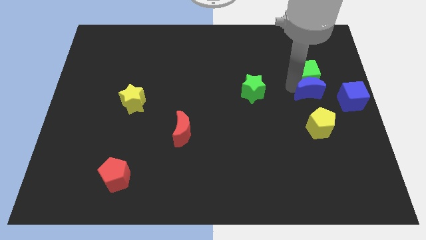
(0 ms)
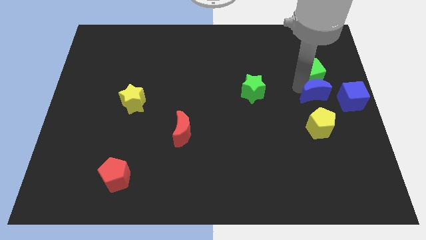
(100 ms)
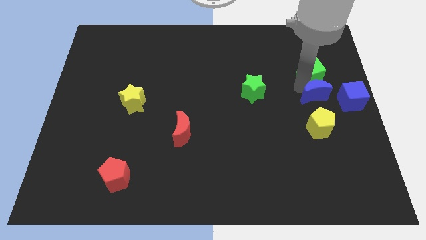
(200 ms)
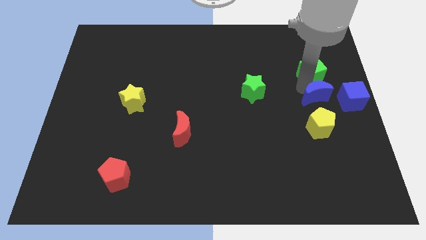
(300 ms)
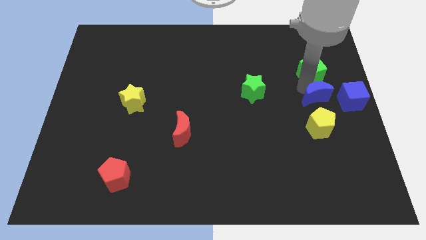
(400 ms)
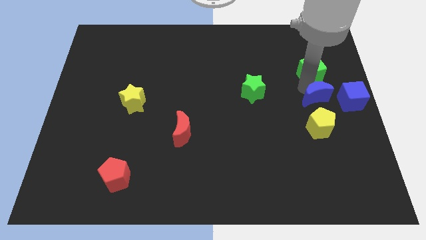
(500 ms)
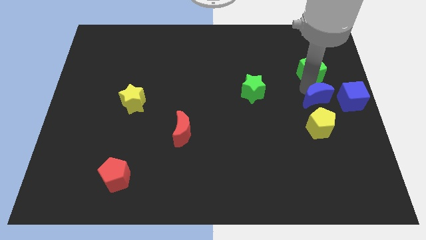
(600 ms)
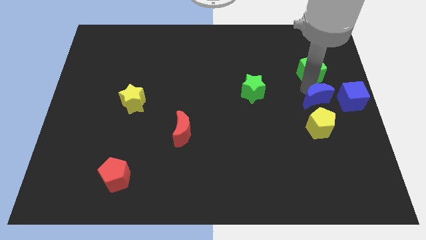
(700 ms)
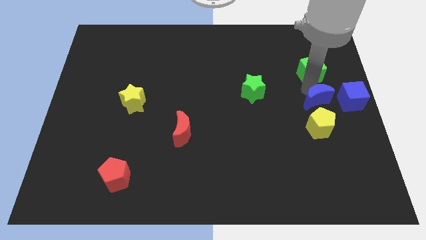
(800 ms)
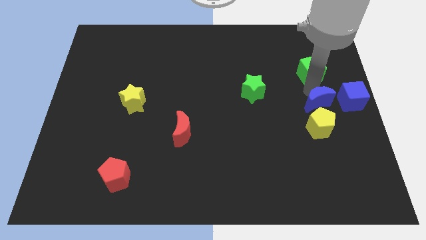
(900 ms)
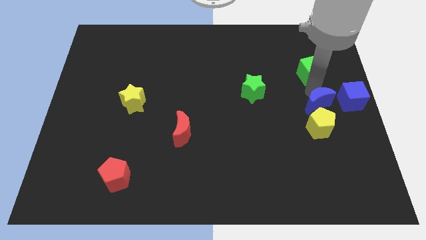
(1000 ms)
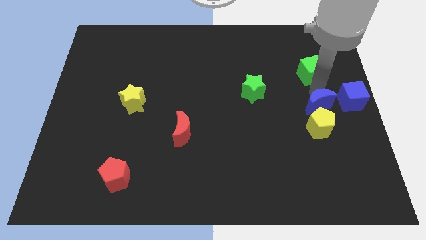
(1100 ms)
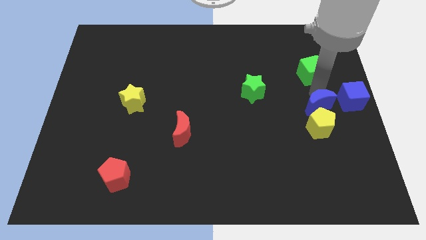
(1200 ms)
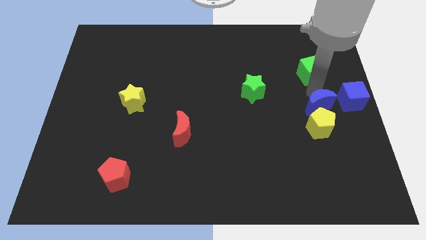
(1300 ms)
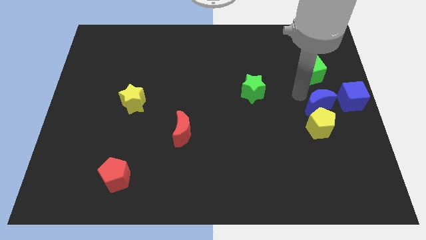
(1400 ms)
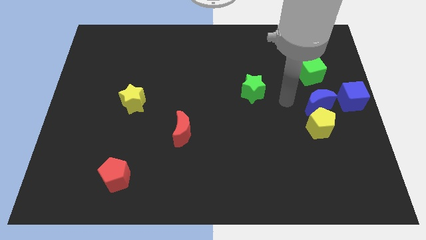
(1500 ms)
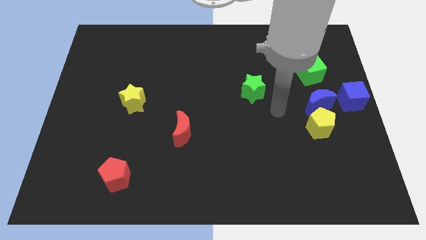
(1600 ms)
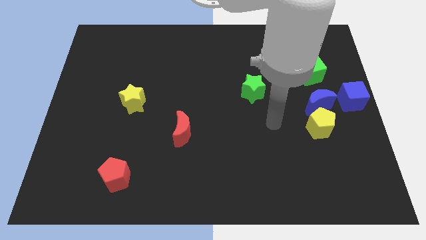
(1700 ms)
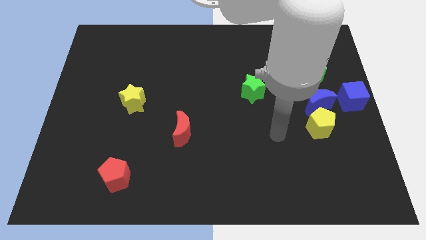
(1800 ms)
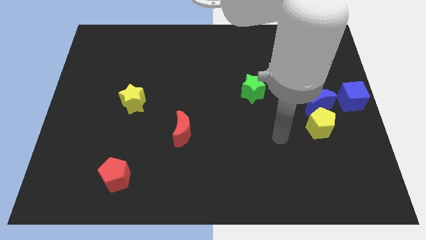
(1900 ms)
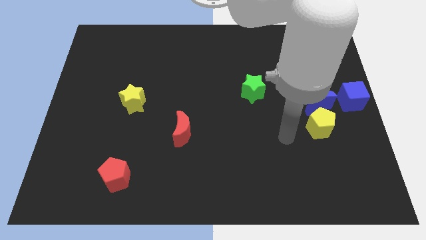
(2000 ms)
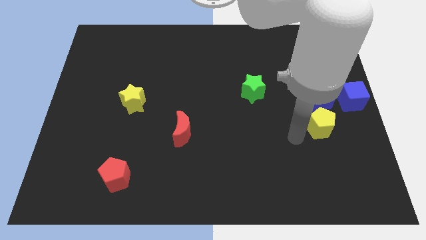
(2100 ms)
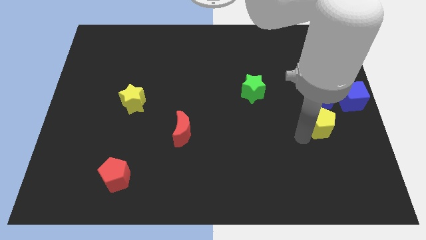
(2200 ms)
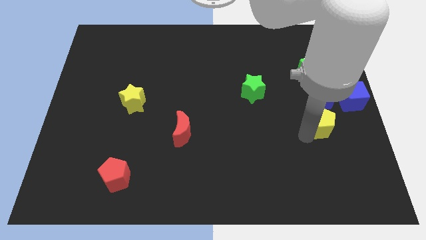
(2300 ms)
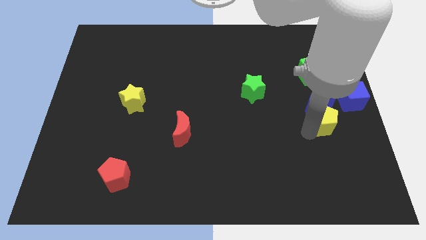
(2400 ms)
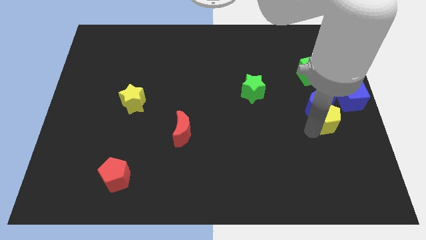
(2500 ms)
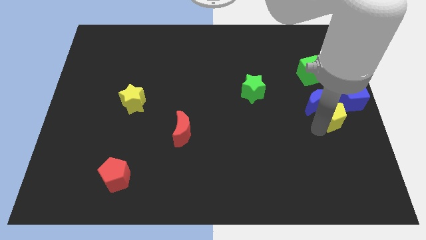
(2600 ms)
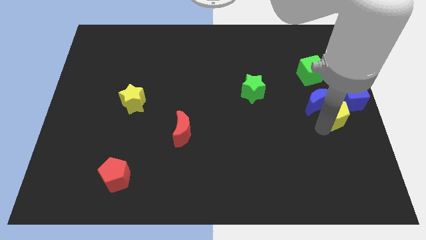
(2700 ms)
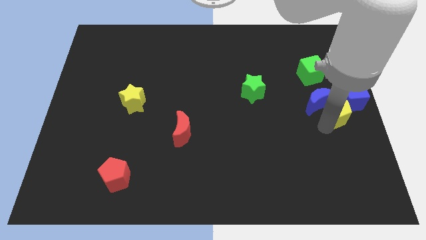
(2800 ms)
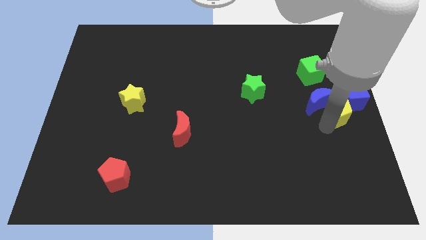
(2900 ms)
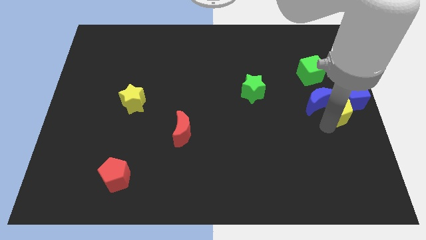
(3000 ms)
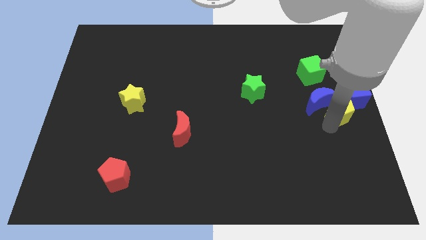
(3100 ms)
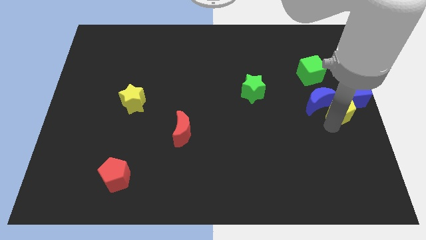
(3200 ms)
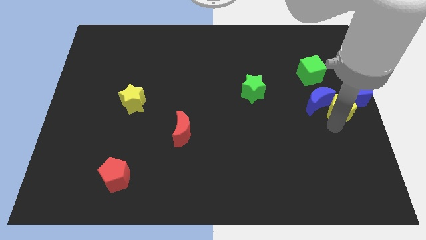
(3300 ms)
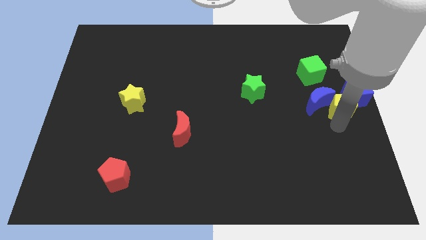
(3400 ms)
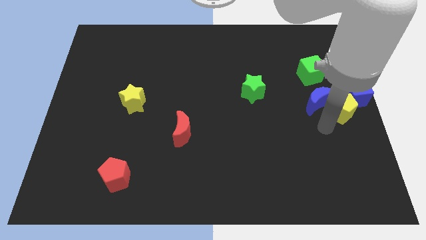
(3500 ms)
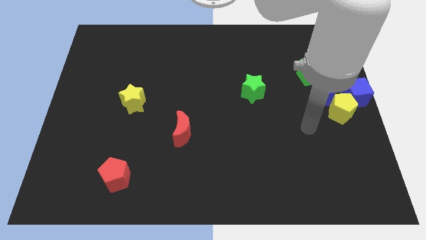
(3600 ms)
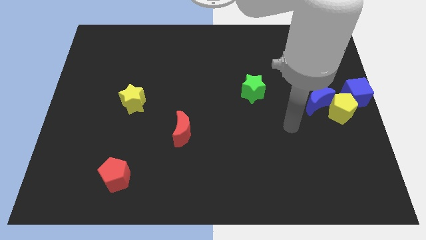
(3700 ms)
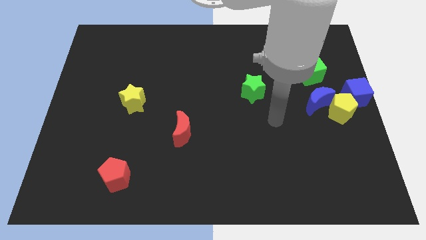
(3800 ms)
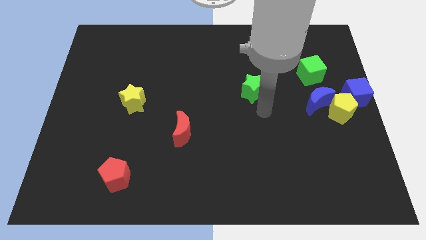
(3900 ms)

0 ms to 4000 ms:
push blue moon and yellow pentagon close to each other

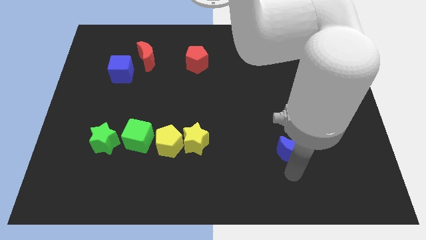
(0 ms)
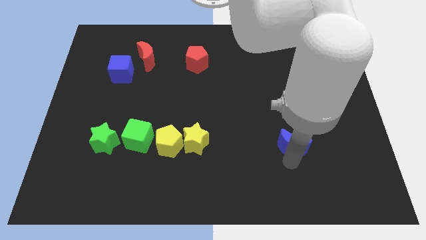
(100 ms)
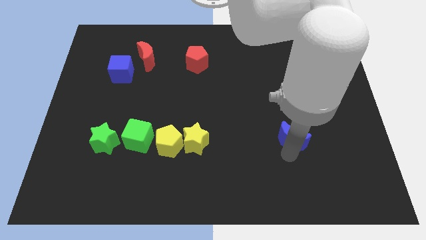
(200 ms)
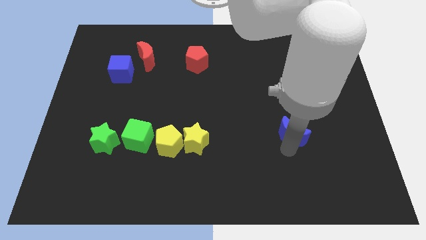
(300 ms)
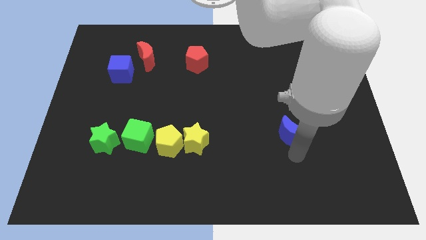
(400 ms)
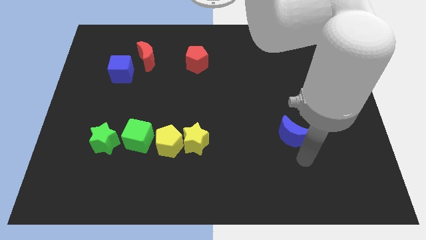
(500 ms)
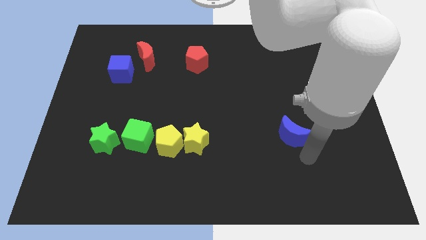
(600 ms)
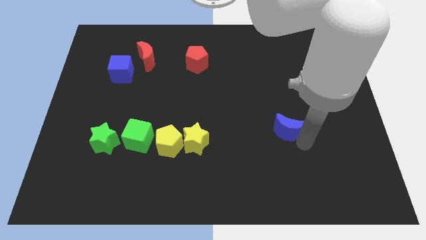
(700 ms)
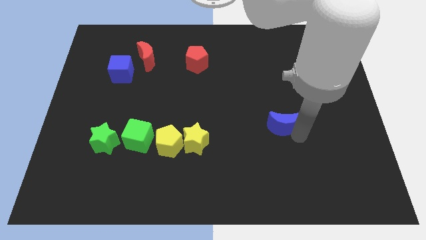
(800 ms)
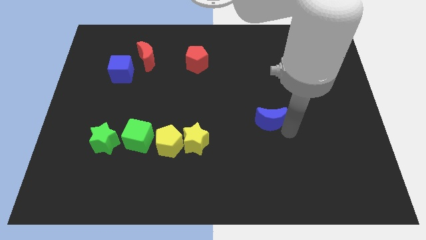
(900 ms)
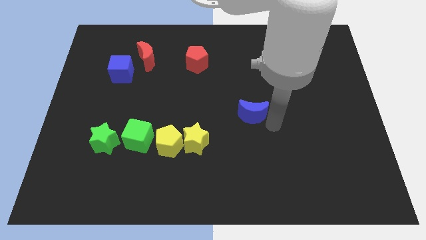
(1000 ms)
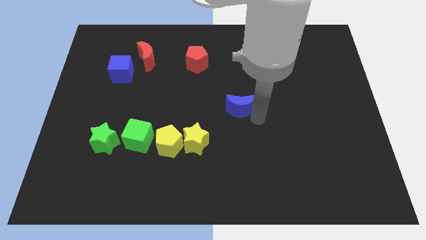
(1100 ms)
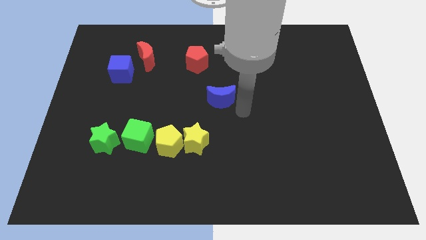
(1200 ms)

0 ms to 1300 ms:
put the blue moon at the center of the board

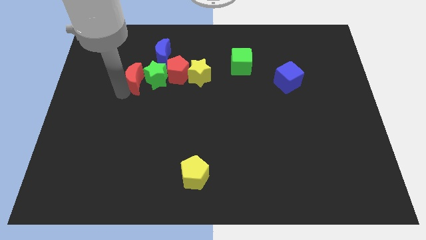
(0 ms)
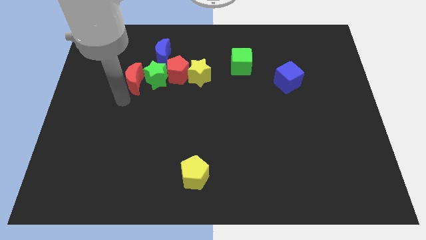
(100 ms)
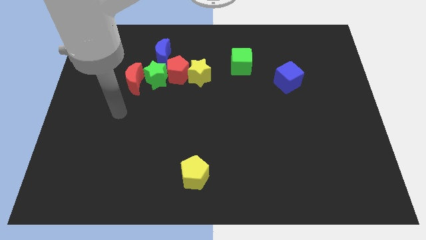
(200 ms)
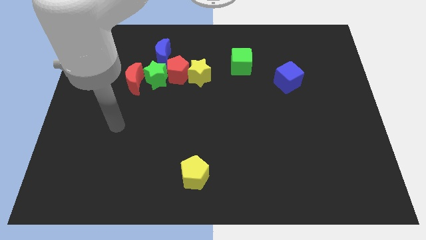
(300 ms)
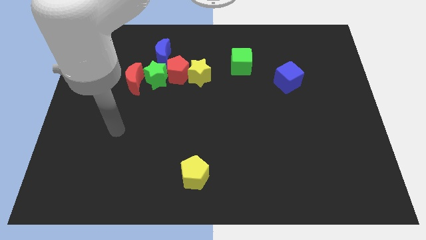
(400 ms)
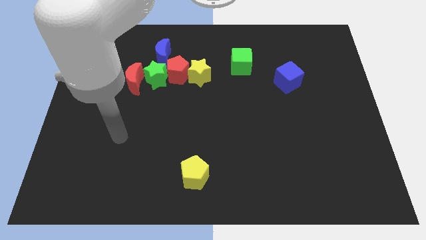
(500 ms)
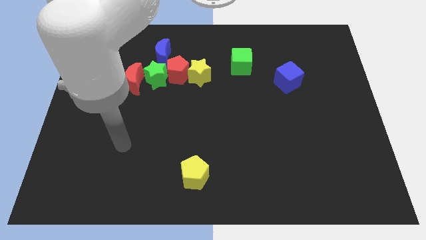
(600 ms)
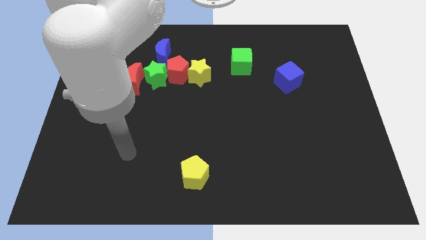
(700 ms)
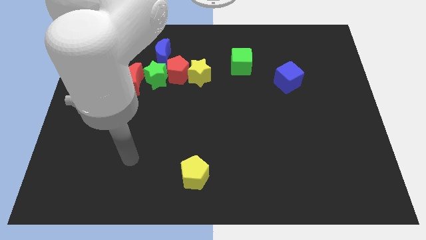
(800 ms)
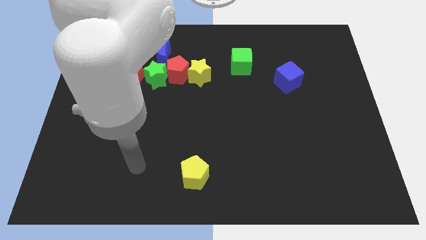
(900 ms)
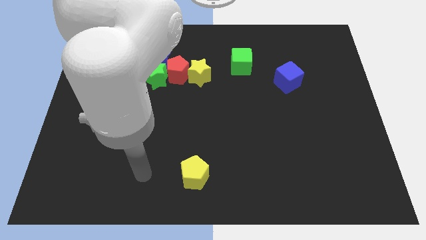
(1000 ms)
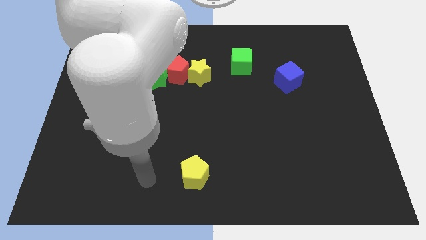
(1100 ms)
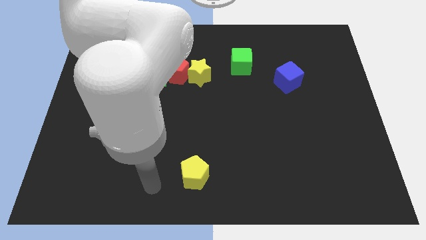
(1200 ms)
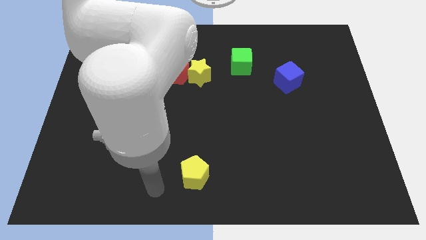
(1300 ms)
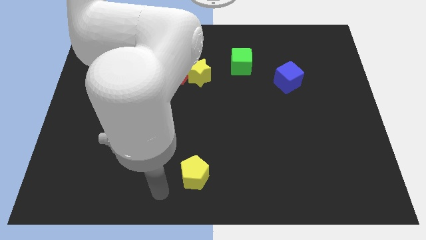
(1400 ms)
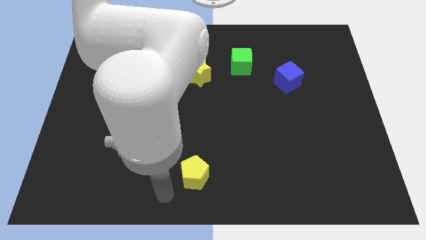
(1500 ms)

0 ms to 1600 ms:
move your arm away from red moon

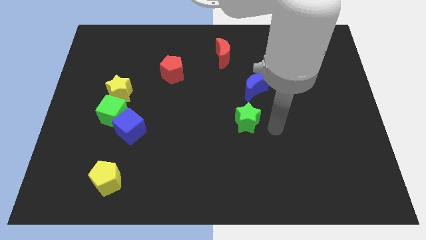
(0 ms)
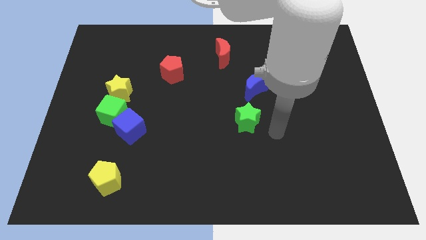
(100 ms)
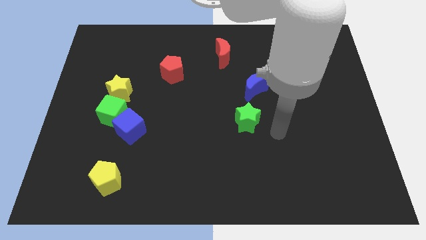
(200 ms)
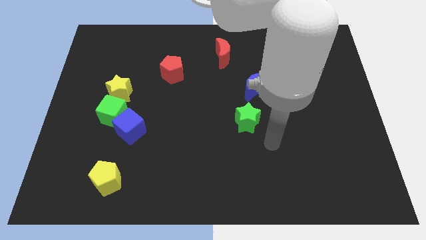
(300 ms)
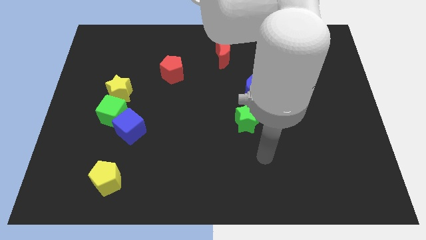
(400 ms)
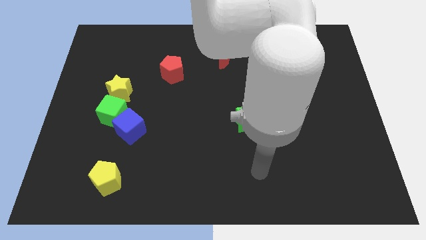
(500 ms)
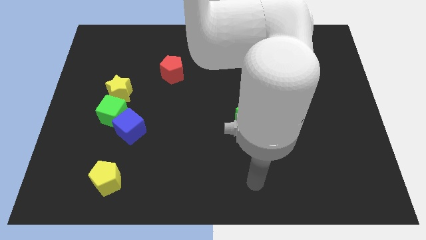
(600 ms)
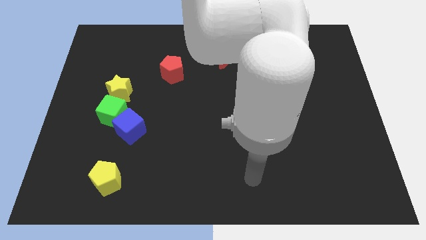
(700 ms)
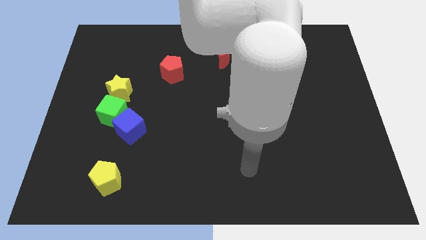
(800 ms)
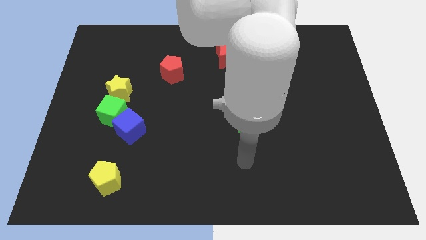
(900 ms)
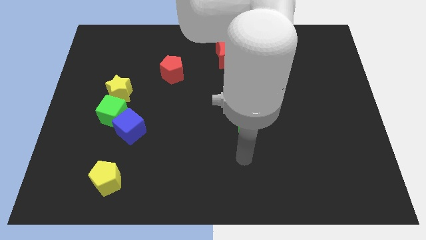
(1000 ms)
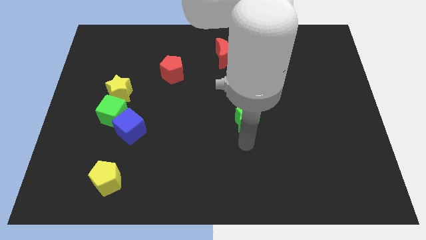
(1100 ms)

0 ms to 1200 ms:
move your arm to the bottom of the green star

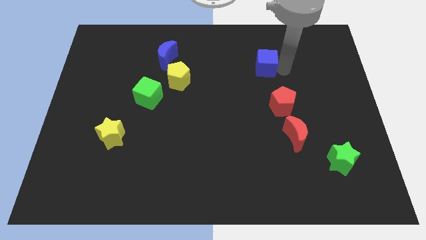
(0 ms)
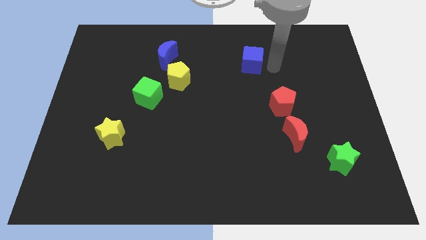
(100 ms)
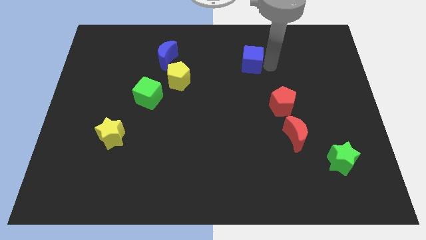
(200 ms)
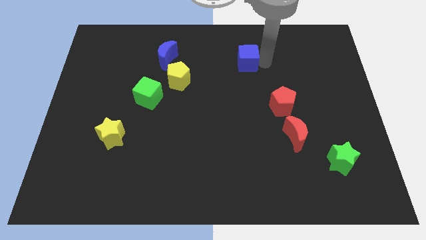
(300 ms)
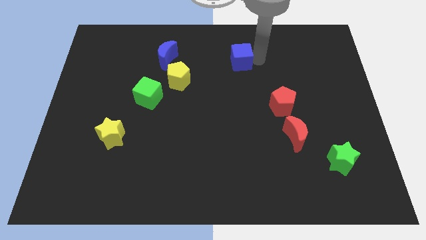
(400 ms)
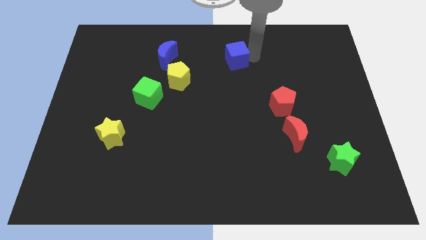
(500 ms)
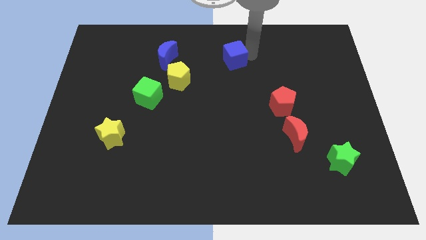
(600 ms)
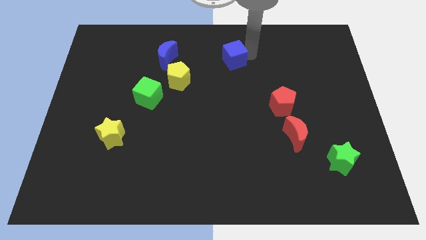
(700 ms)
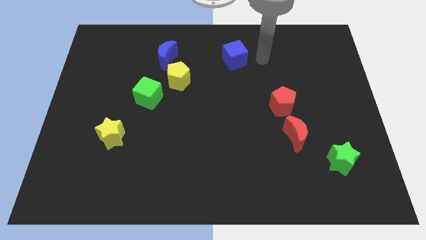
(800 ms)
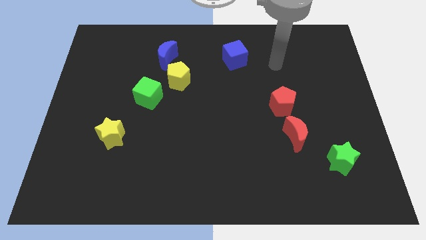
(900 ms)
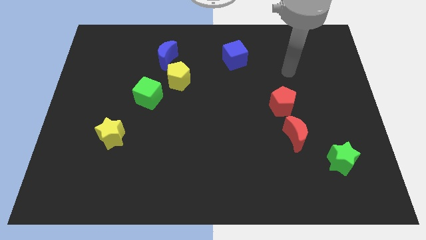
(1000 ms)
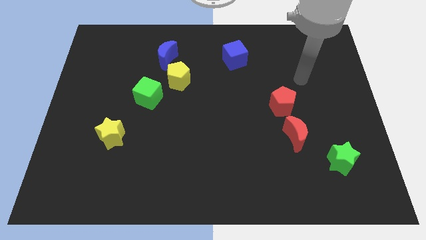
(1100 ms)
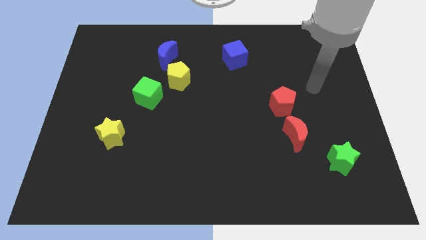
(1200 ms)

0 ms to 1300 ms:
push the blue cube to the left of the board
